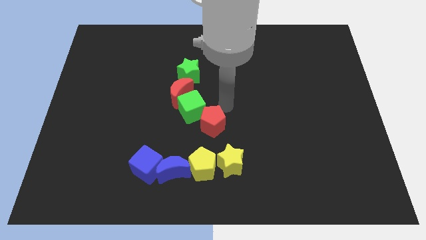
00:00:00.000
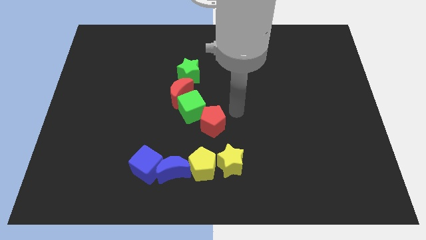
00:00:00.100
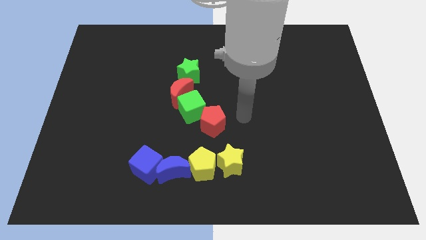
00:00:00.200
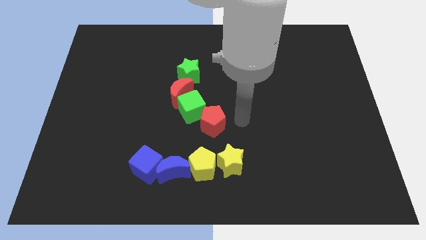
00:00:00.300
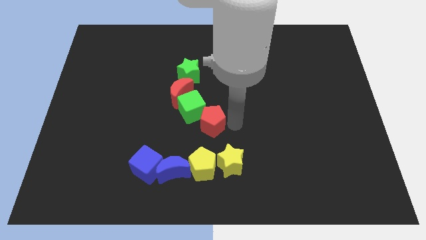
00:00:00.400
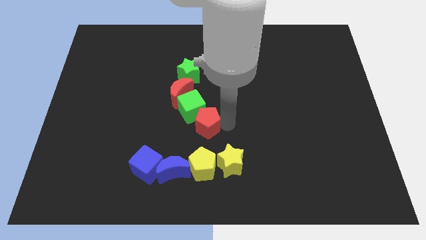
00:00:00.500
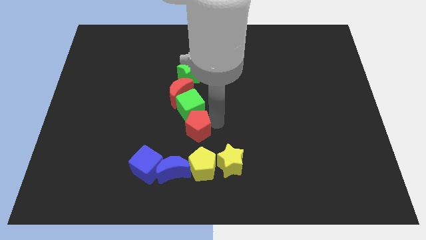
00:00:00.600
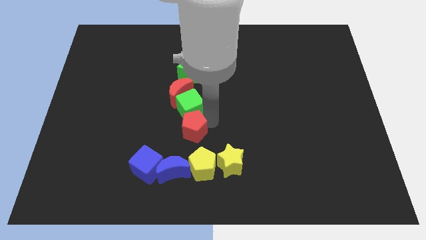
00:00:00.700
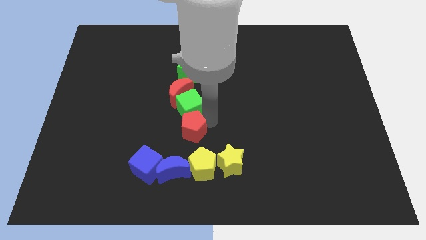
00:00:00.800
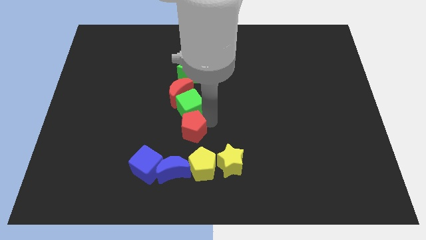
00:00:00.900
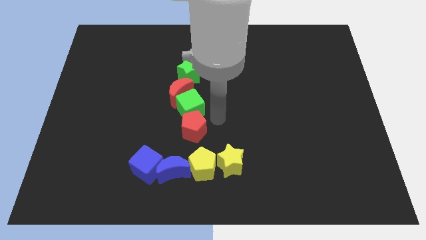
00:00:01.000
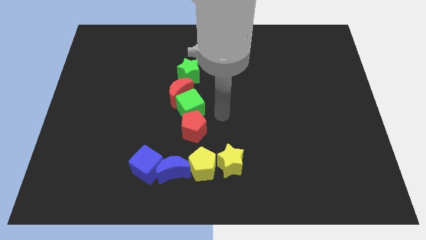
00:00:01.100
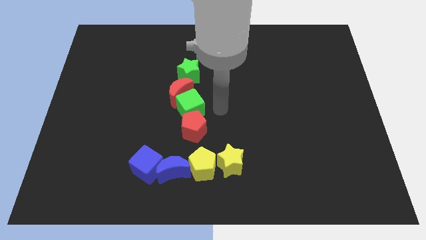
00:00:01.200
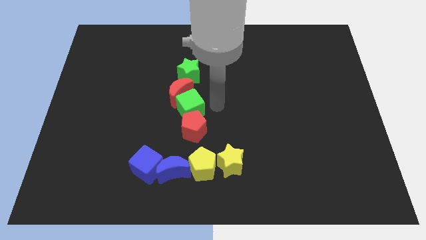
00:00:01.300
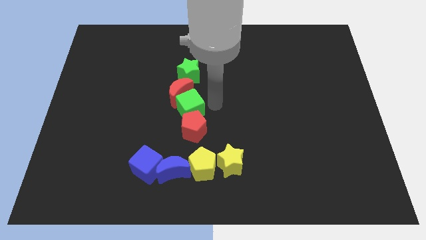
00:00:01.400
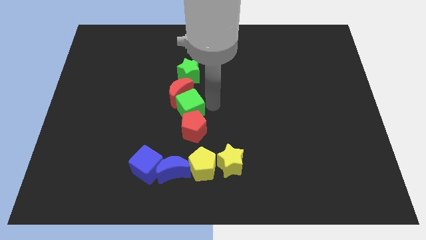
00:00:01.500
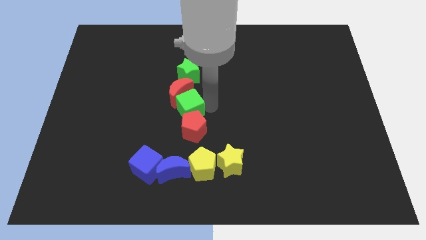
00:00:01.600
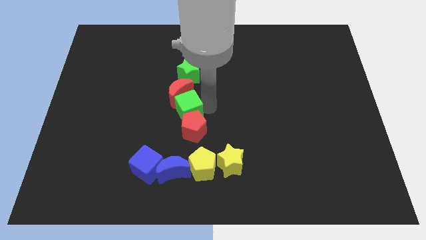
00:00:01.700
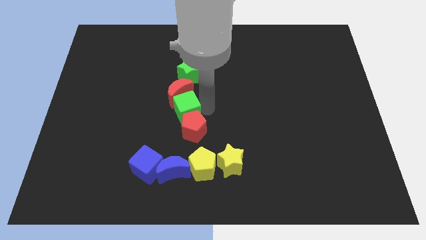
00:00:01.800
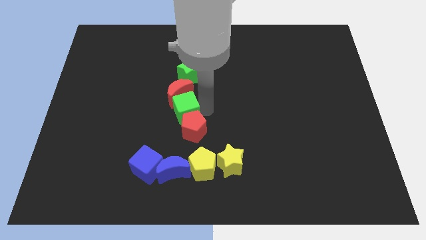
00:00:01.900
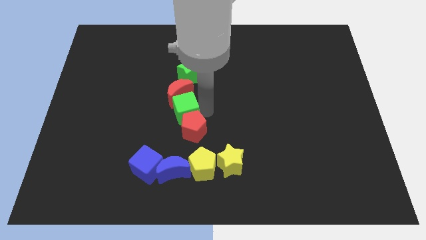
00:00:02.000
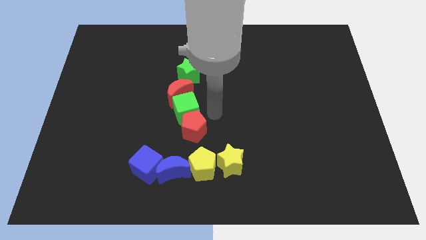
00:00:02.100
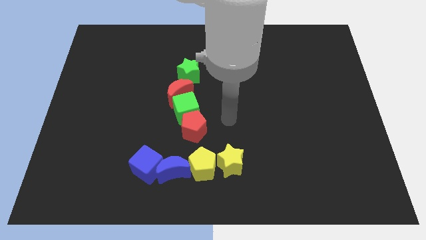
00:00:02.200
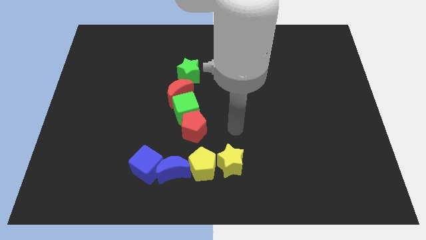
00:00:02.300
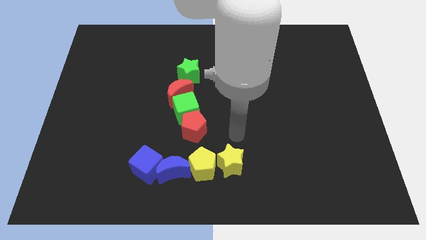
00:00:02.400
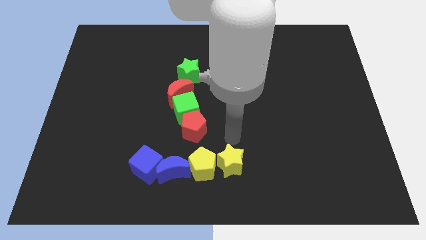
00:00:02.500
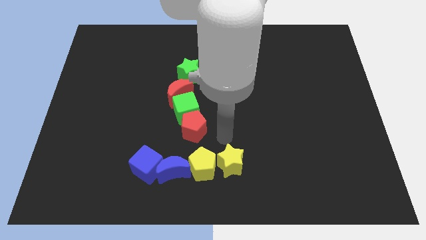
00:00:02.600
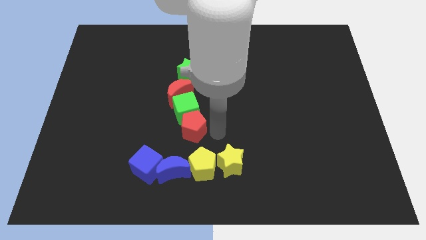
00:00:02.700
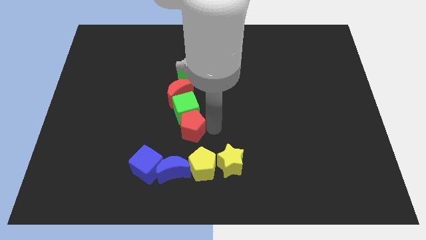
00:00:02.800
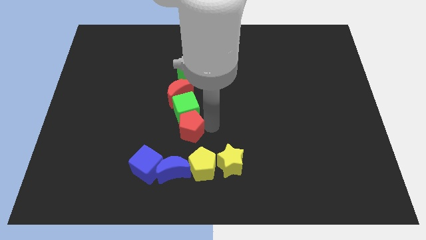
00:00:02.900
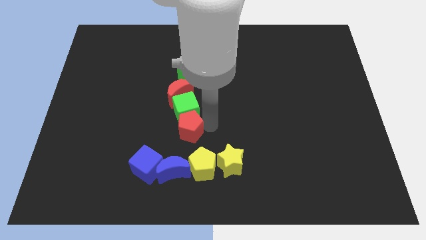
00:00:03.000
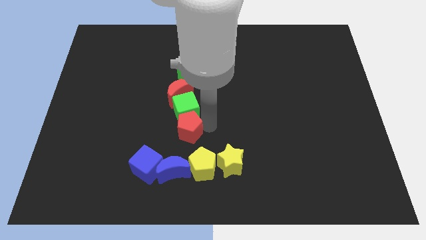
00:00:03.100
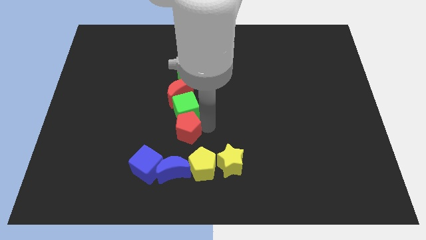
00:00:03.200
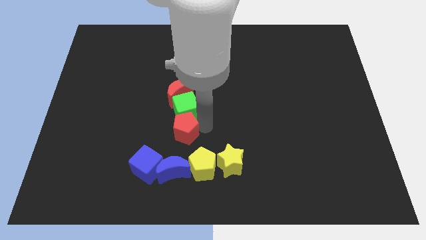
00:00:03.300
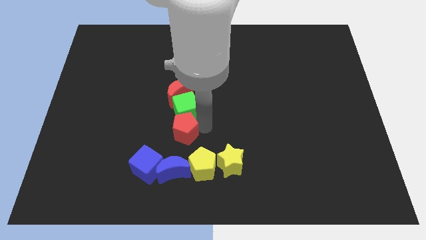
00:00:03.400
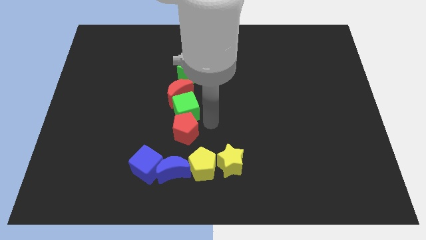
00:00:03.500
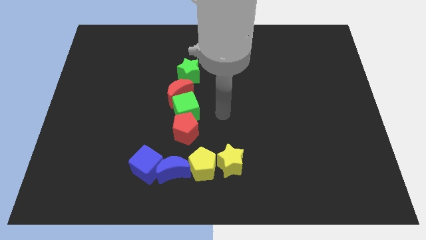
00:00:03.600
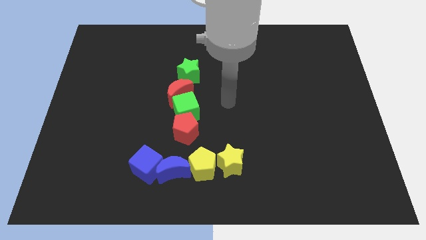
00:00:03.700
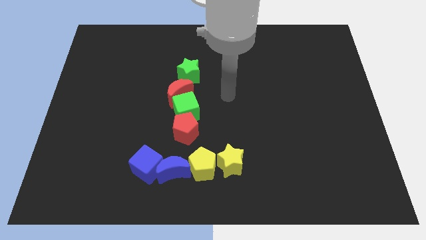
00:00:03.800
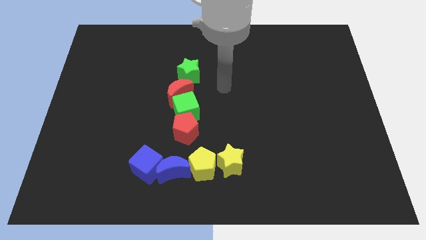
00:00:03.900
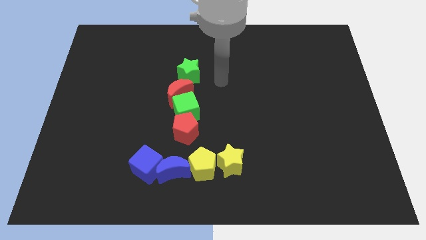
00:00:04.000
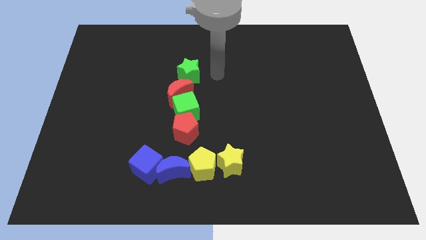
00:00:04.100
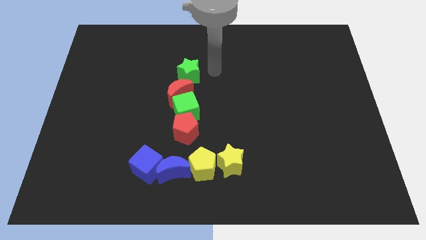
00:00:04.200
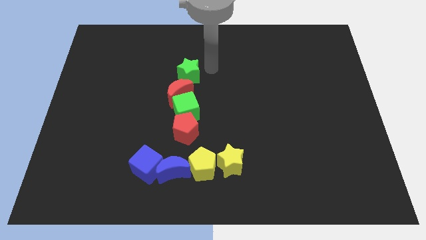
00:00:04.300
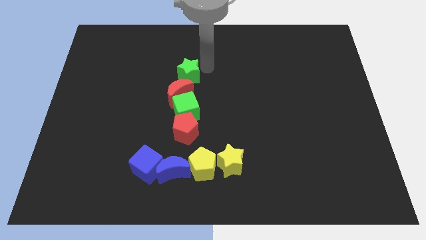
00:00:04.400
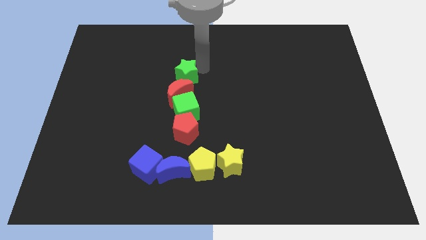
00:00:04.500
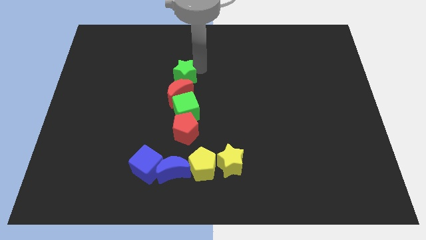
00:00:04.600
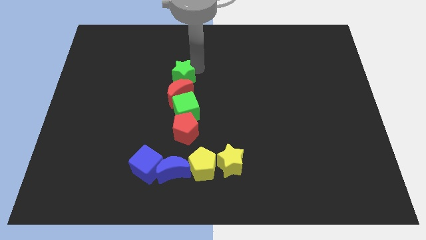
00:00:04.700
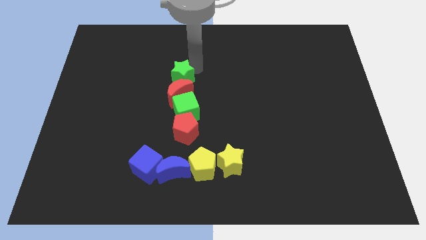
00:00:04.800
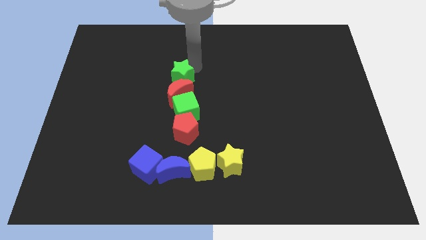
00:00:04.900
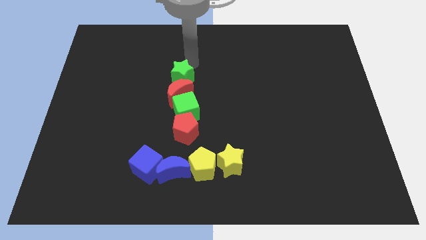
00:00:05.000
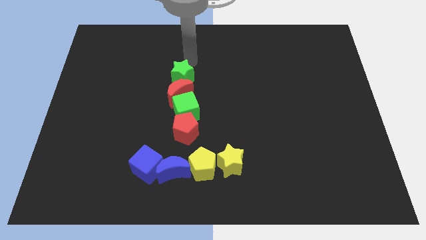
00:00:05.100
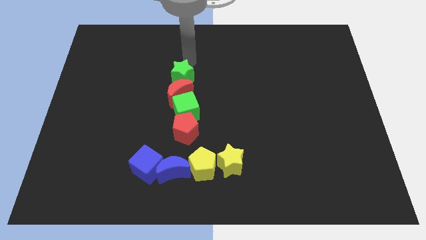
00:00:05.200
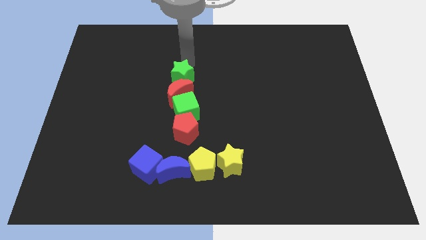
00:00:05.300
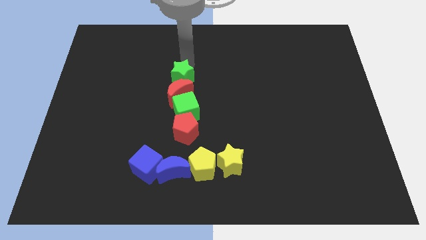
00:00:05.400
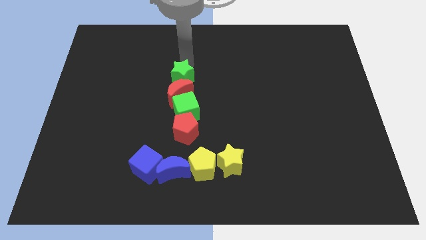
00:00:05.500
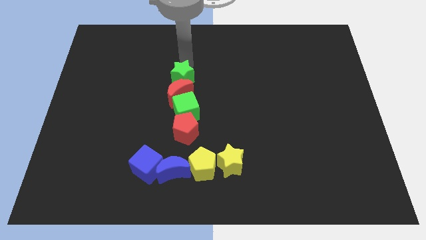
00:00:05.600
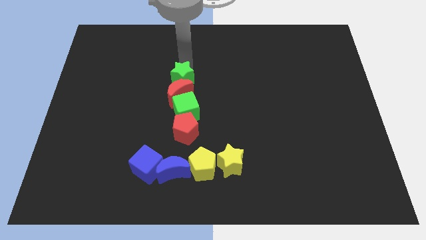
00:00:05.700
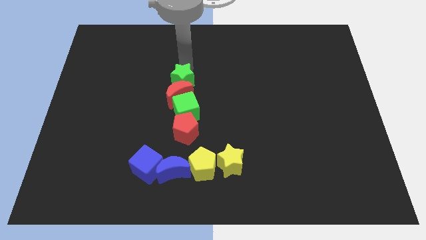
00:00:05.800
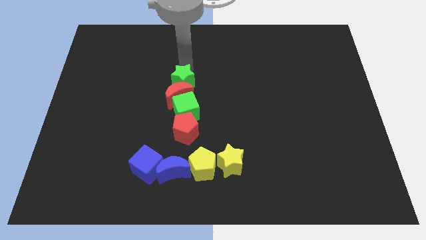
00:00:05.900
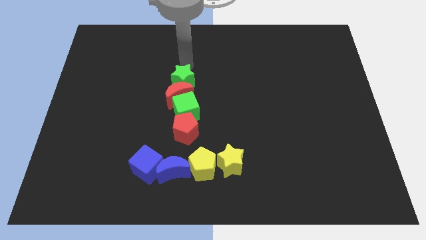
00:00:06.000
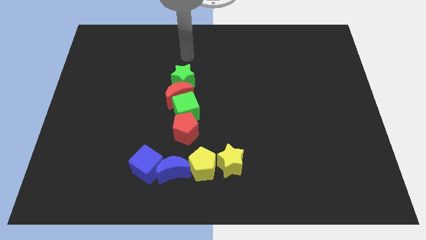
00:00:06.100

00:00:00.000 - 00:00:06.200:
move the group of blocks in a row to the center of the board

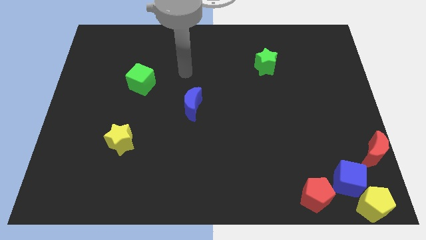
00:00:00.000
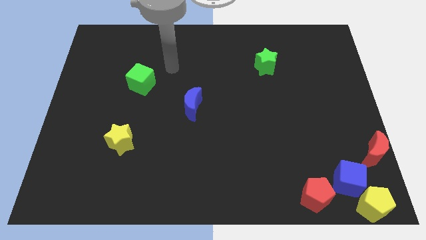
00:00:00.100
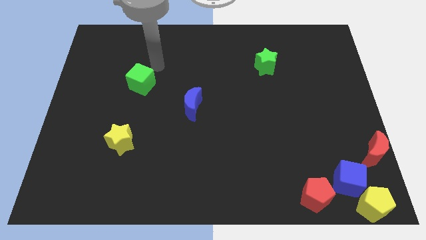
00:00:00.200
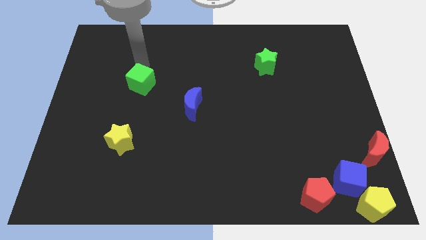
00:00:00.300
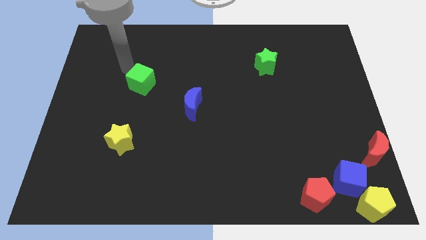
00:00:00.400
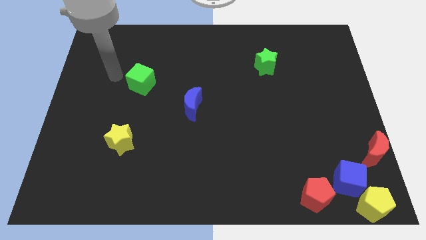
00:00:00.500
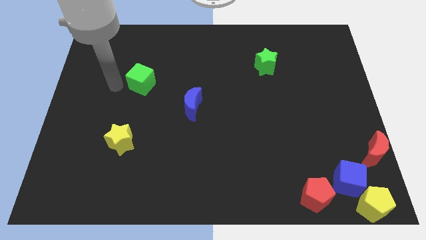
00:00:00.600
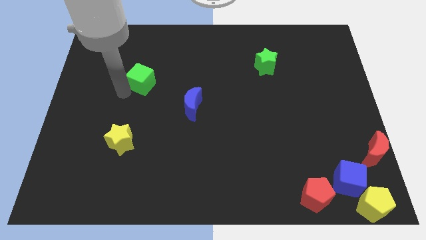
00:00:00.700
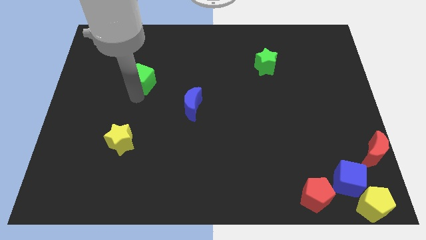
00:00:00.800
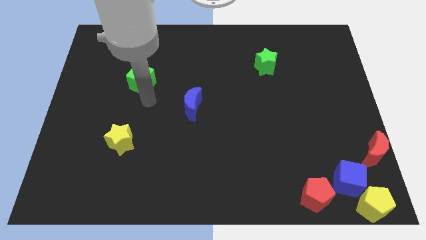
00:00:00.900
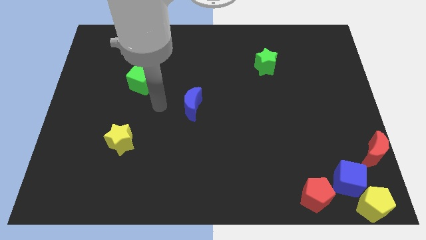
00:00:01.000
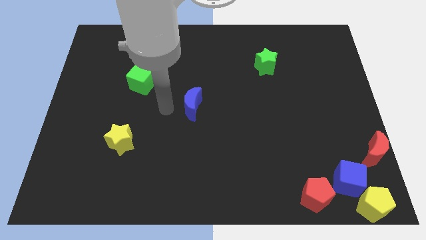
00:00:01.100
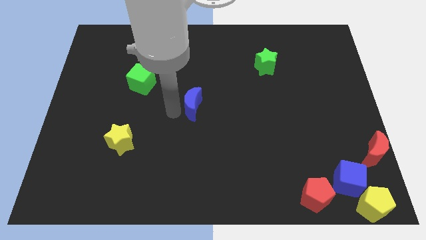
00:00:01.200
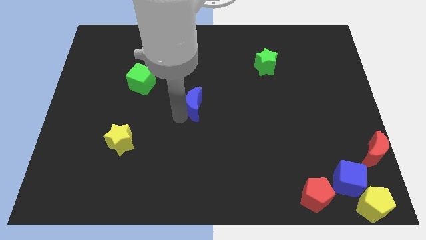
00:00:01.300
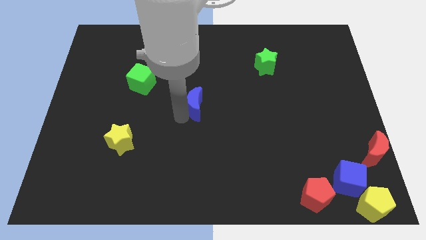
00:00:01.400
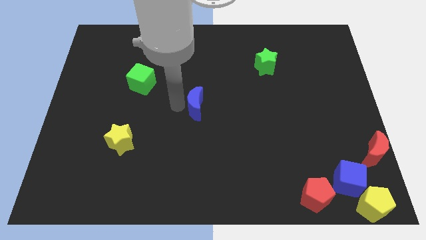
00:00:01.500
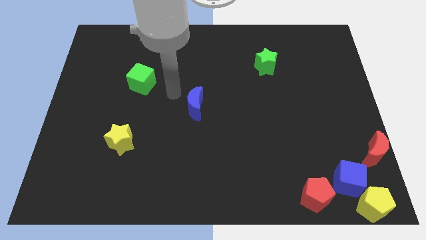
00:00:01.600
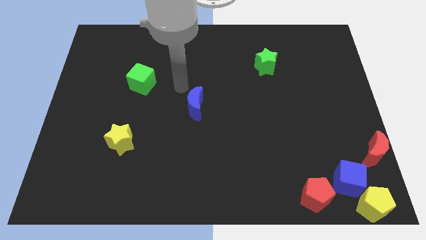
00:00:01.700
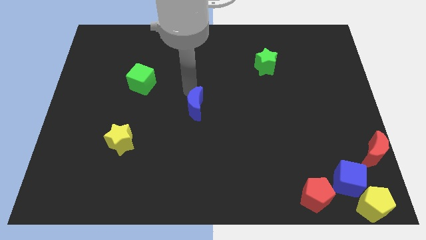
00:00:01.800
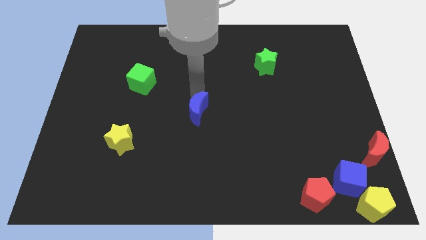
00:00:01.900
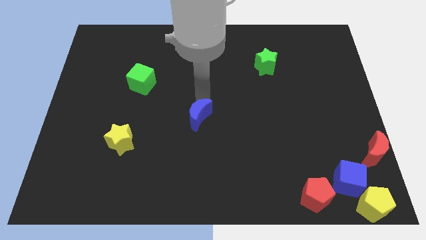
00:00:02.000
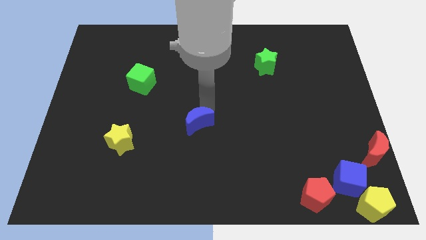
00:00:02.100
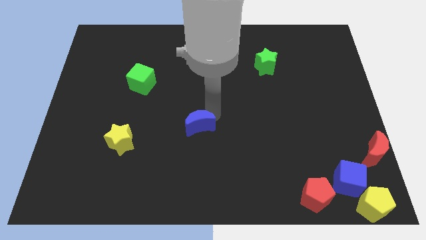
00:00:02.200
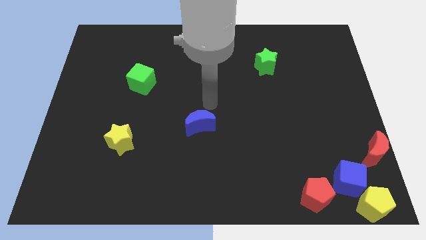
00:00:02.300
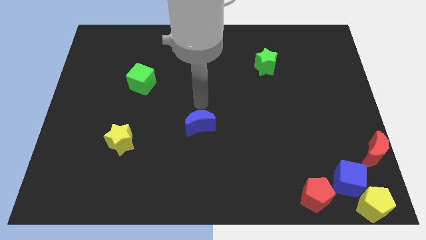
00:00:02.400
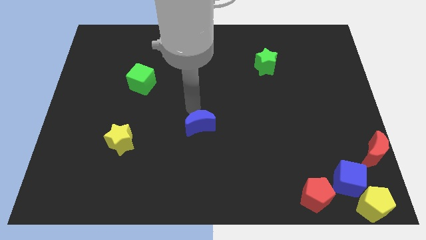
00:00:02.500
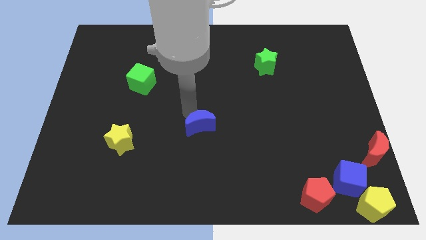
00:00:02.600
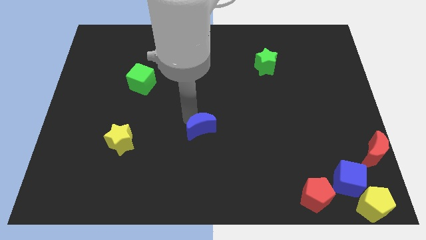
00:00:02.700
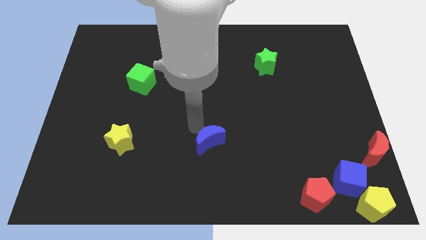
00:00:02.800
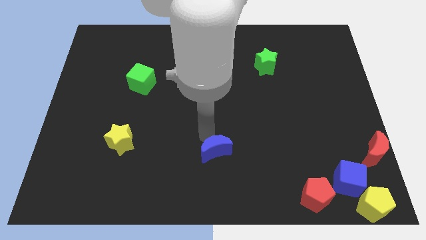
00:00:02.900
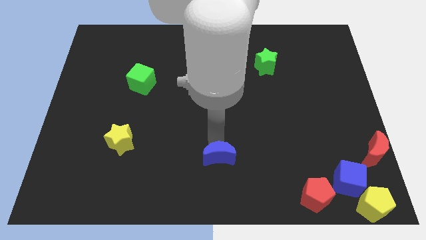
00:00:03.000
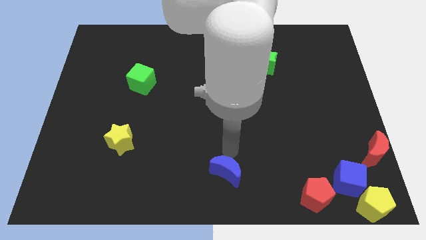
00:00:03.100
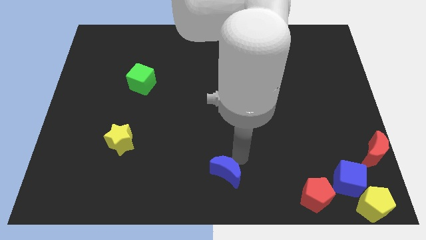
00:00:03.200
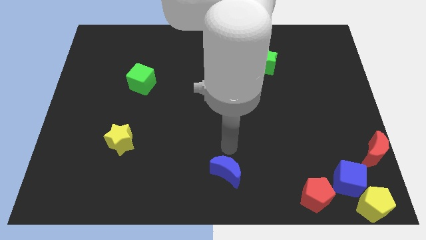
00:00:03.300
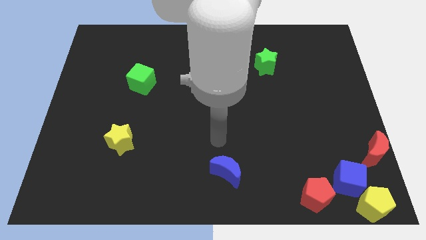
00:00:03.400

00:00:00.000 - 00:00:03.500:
put the blue crescent in between the yellow star and red pentagon
